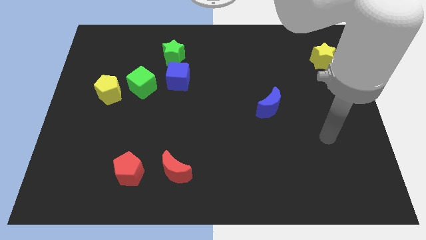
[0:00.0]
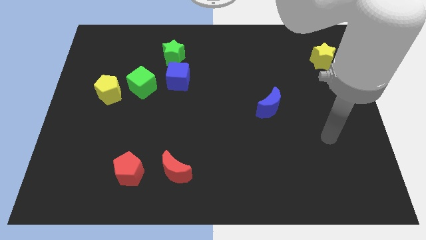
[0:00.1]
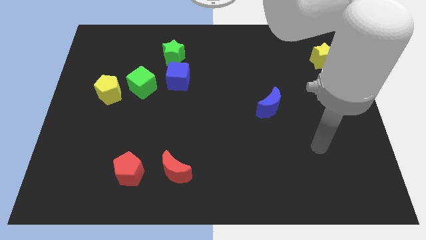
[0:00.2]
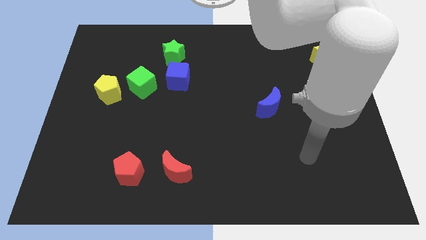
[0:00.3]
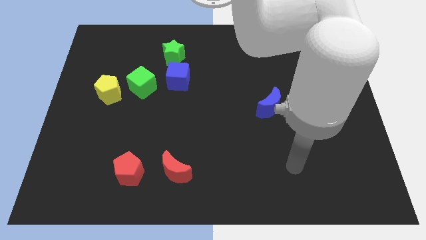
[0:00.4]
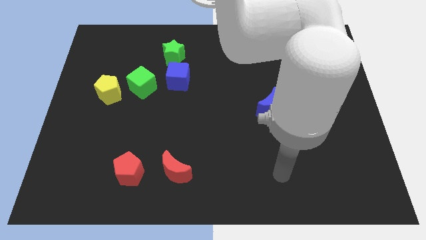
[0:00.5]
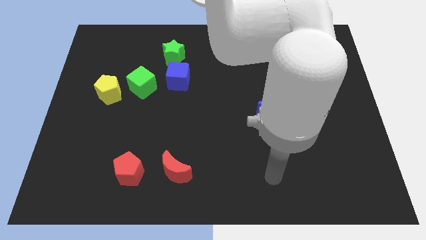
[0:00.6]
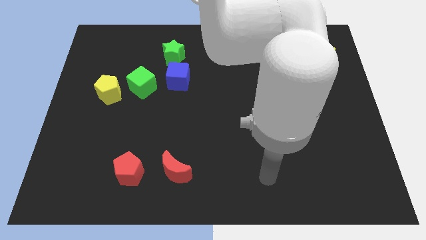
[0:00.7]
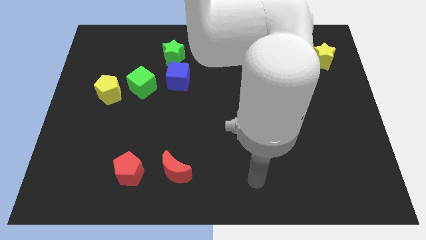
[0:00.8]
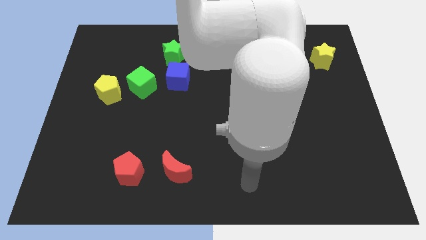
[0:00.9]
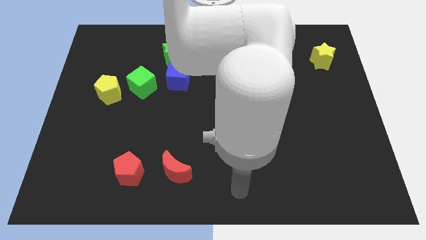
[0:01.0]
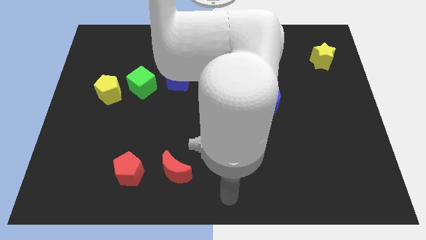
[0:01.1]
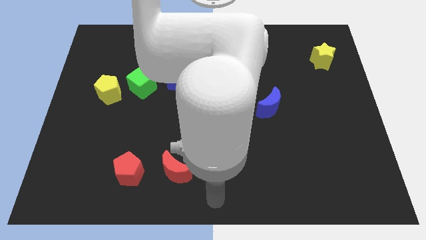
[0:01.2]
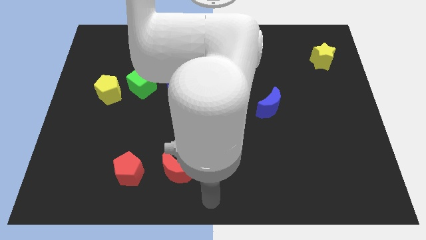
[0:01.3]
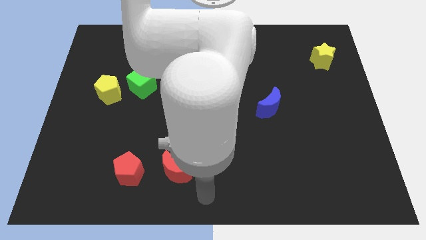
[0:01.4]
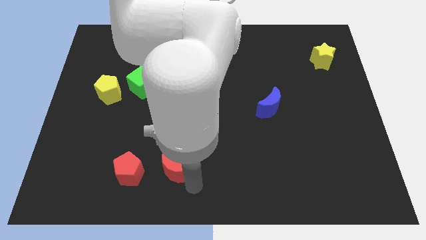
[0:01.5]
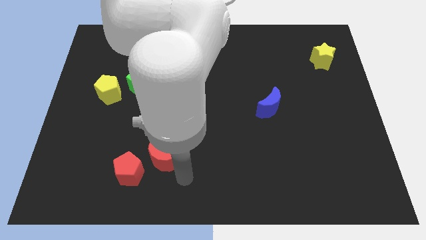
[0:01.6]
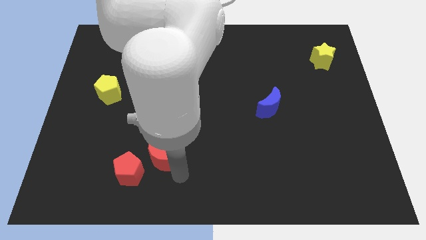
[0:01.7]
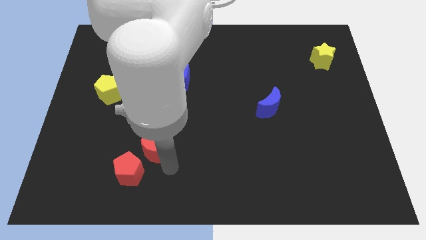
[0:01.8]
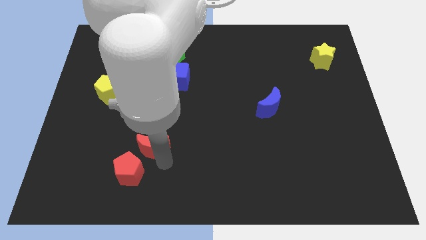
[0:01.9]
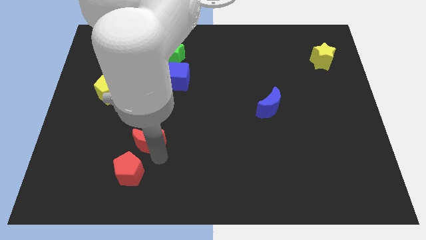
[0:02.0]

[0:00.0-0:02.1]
slide the red moon diagonal to the yellow pentagon

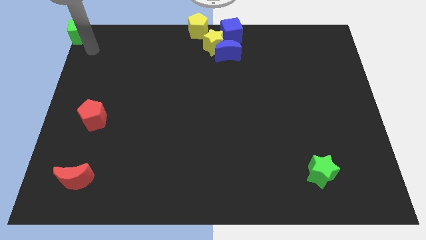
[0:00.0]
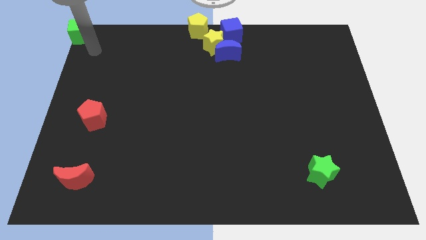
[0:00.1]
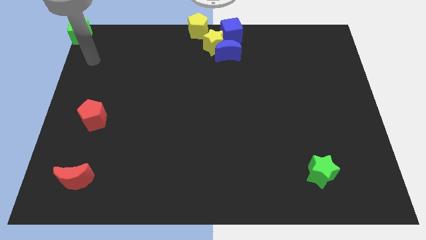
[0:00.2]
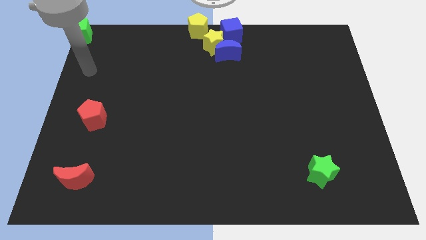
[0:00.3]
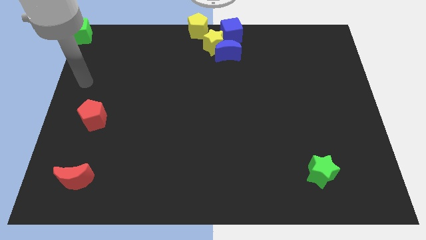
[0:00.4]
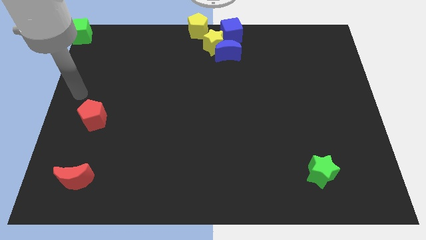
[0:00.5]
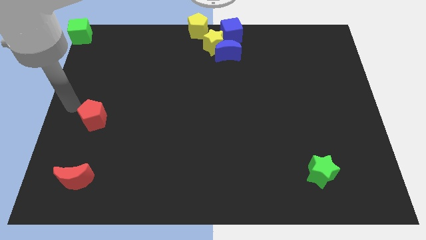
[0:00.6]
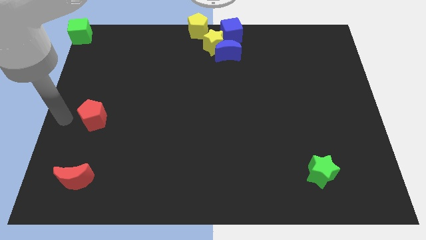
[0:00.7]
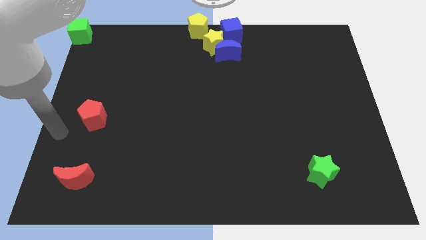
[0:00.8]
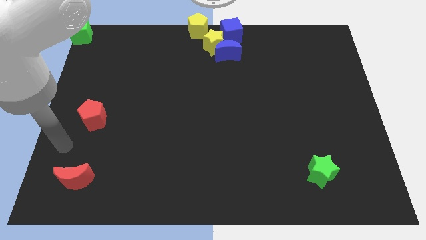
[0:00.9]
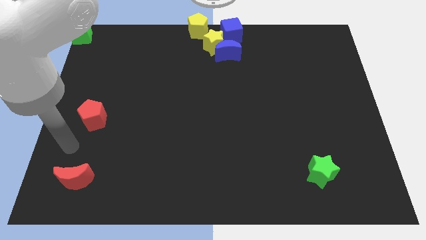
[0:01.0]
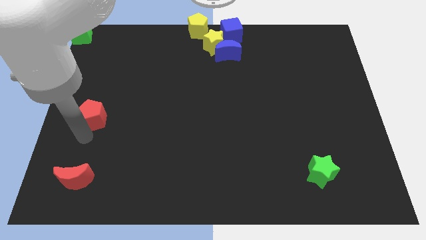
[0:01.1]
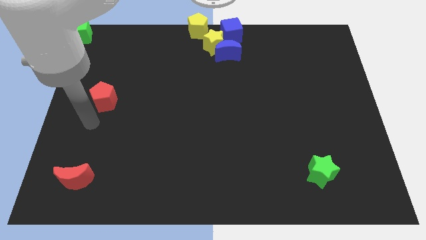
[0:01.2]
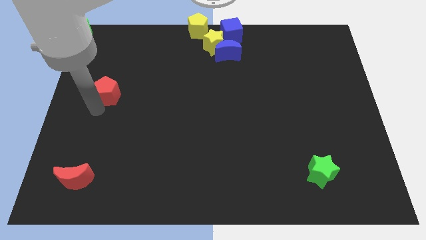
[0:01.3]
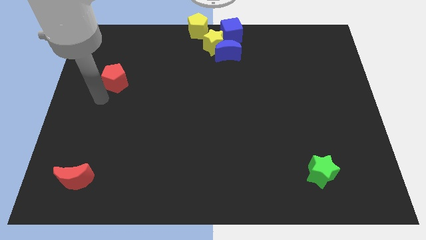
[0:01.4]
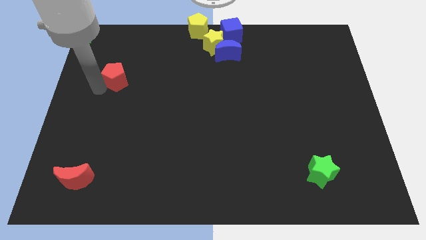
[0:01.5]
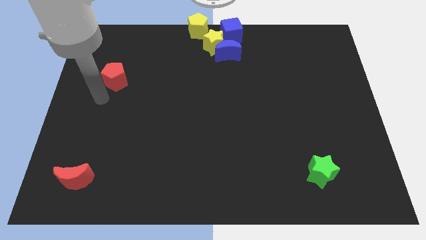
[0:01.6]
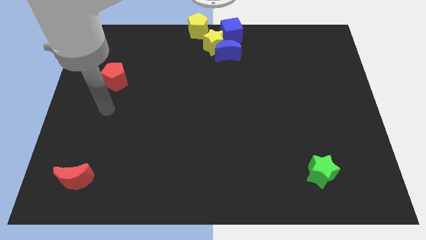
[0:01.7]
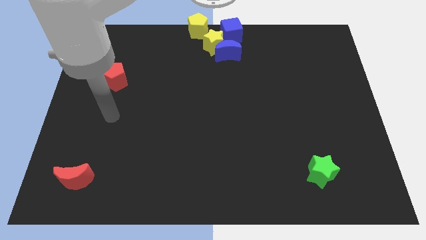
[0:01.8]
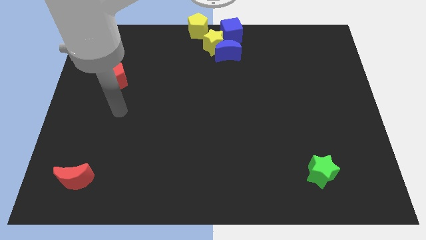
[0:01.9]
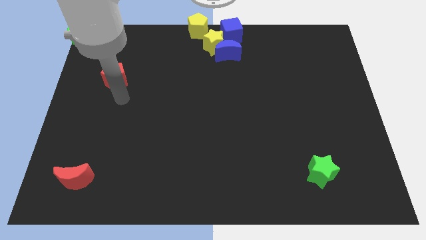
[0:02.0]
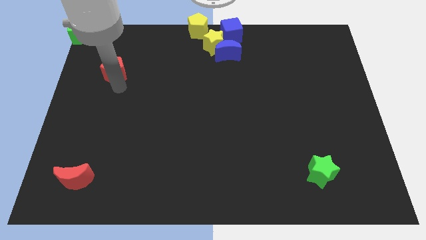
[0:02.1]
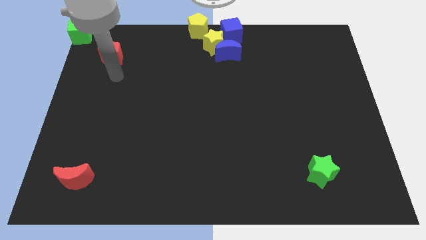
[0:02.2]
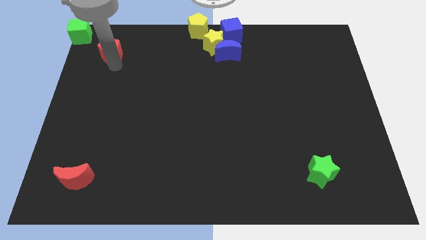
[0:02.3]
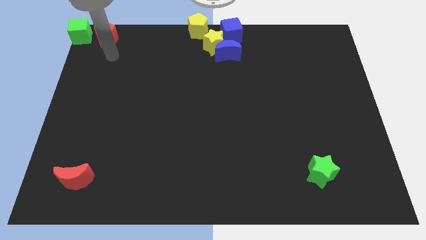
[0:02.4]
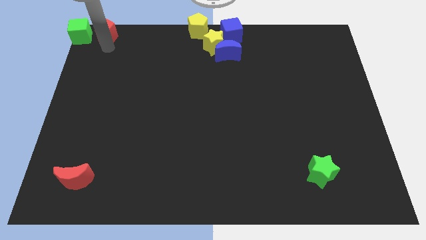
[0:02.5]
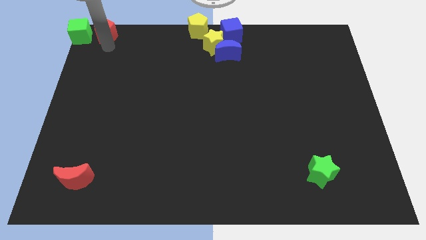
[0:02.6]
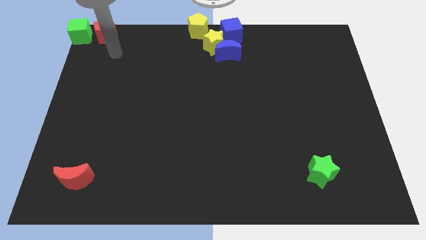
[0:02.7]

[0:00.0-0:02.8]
place red pentagon towards right side of green cube

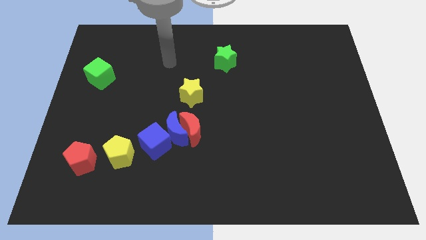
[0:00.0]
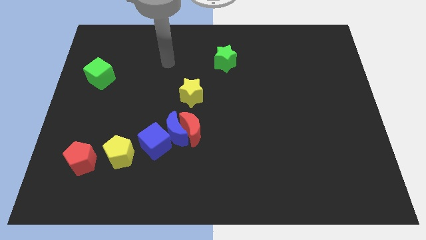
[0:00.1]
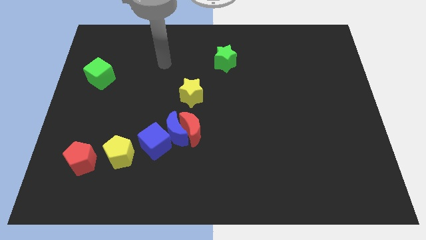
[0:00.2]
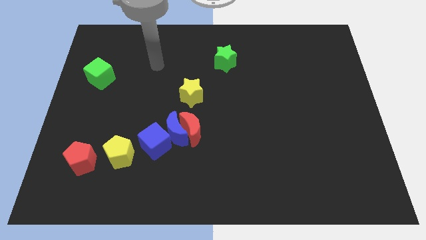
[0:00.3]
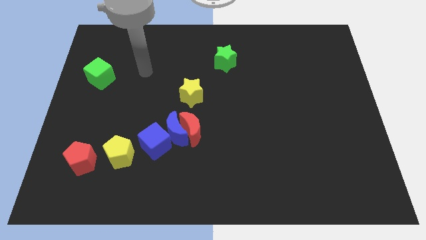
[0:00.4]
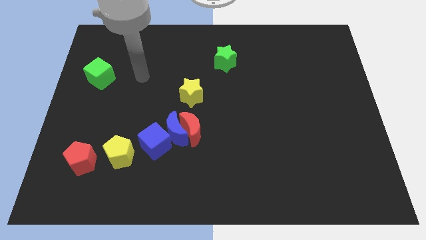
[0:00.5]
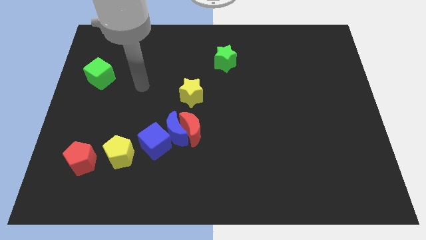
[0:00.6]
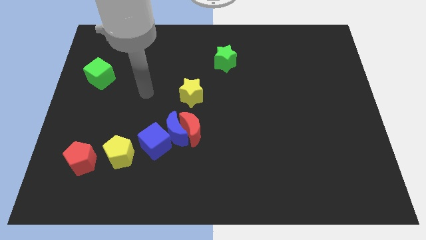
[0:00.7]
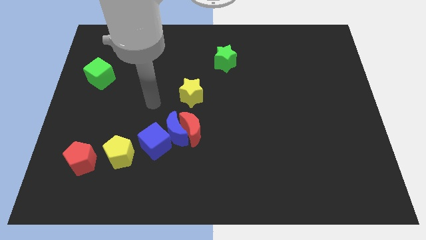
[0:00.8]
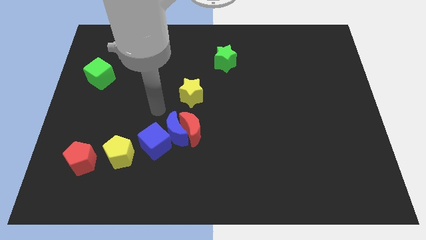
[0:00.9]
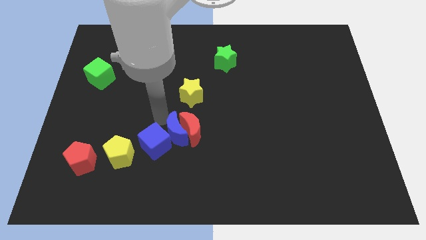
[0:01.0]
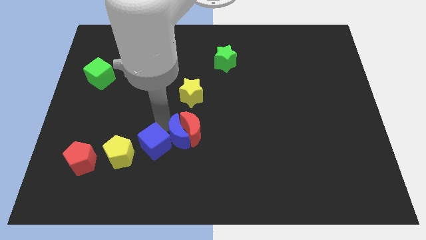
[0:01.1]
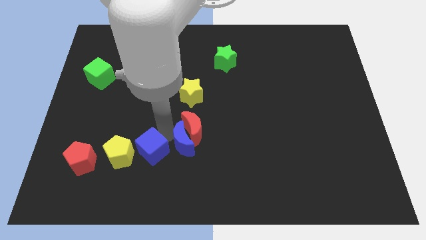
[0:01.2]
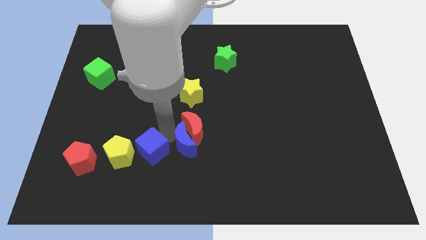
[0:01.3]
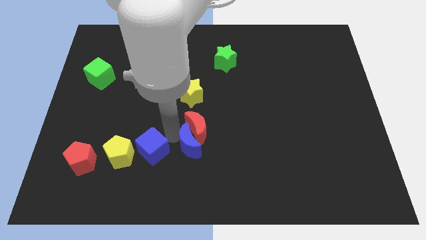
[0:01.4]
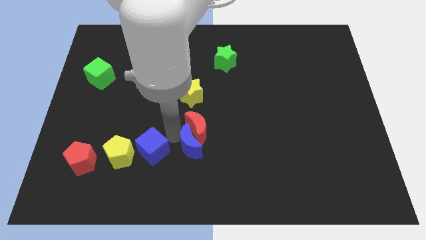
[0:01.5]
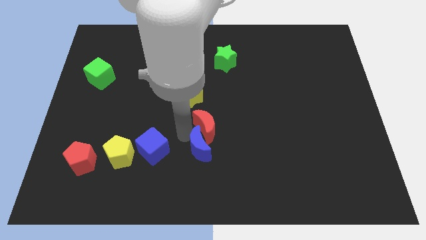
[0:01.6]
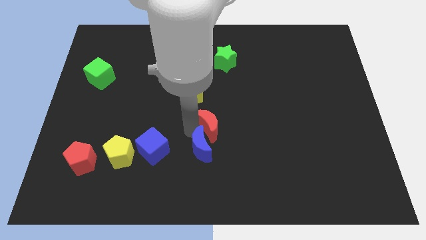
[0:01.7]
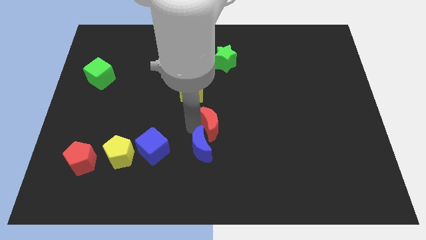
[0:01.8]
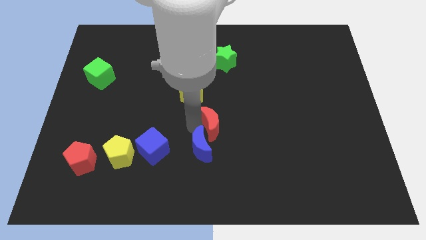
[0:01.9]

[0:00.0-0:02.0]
separate the blue crescent from red crescent

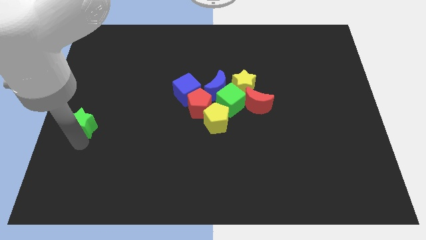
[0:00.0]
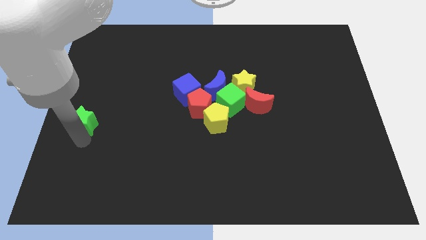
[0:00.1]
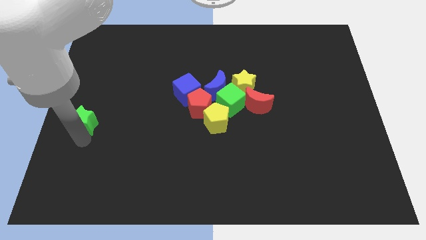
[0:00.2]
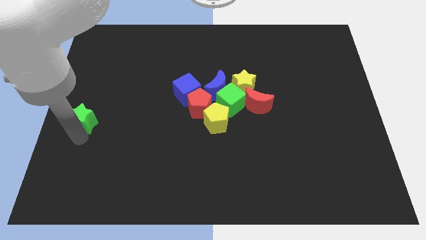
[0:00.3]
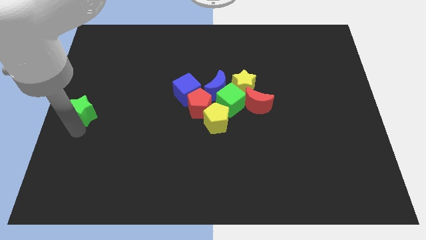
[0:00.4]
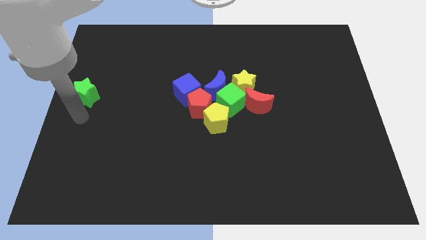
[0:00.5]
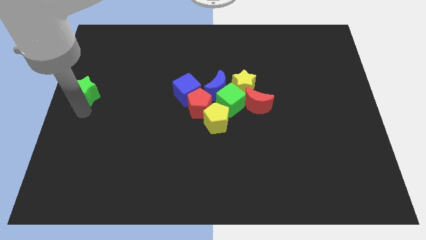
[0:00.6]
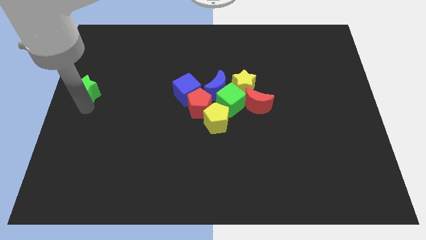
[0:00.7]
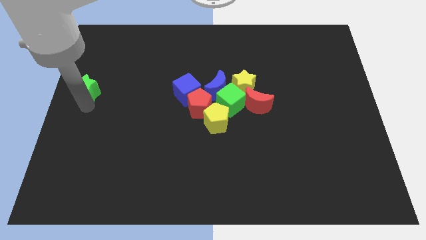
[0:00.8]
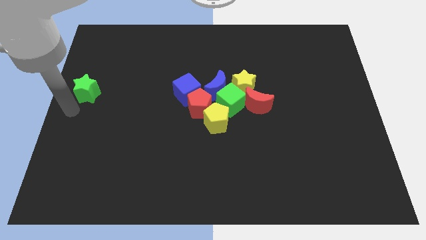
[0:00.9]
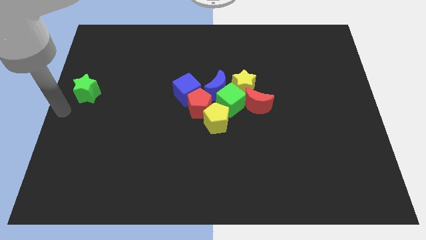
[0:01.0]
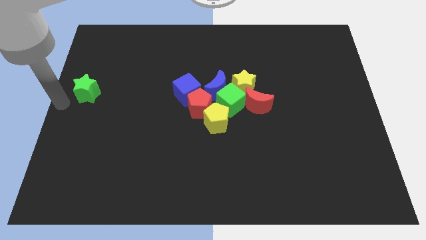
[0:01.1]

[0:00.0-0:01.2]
move green star slightly upward

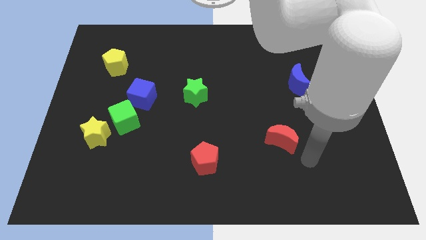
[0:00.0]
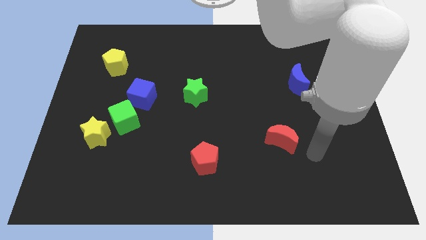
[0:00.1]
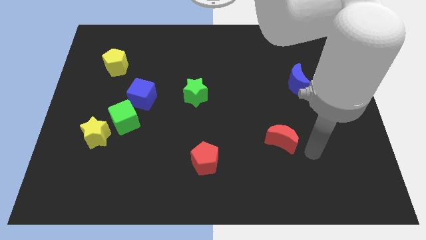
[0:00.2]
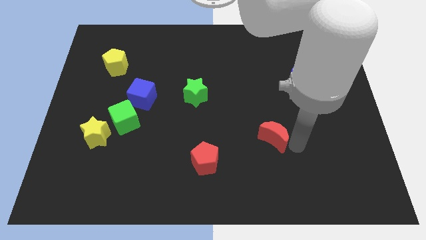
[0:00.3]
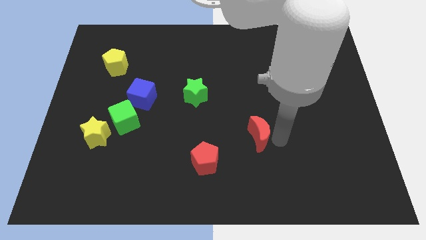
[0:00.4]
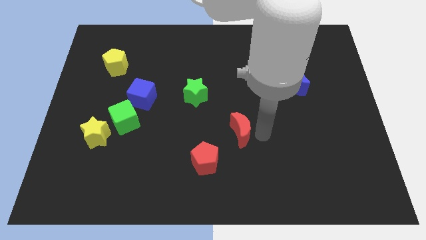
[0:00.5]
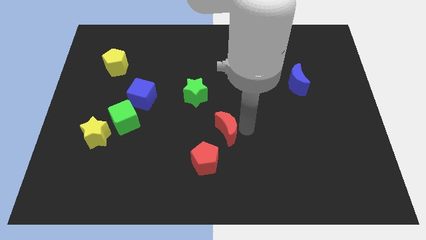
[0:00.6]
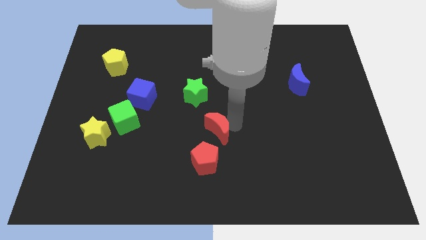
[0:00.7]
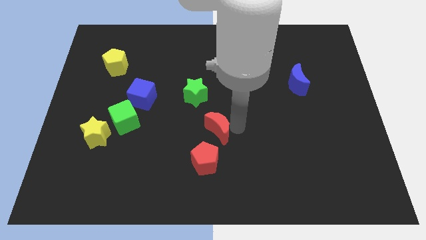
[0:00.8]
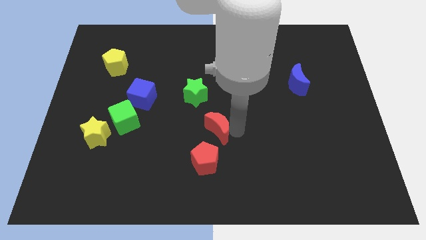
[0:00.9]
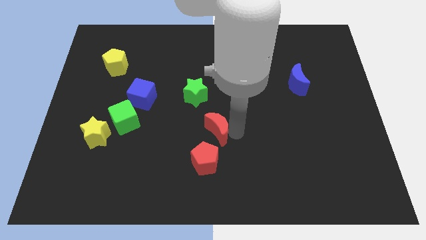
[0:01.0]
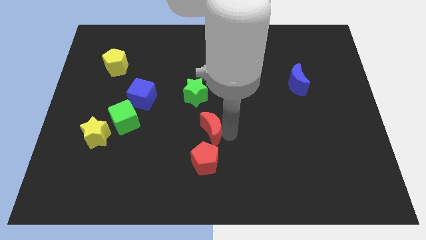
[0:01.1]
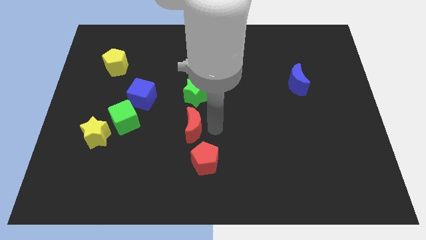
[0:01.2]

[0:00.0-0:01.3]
move the red moon in between the green star and red pentagon
